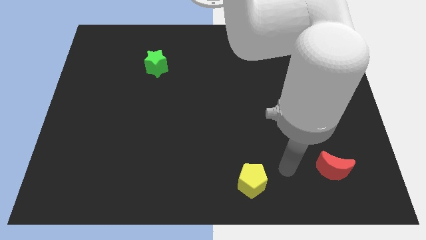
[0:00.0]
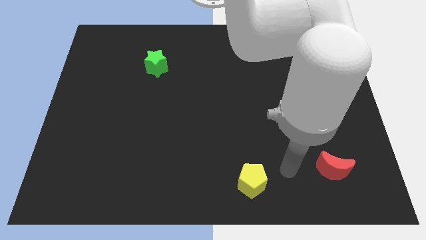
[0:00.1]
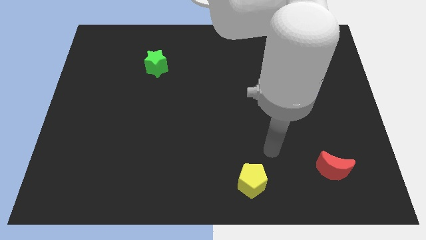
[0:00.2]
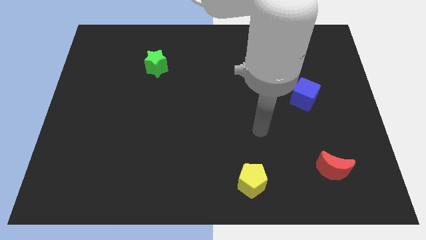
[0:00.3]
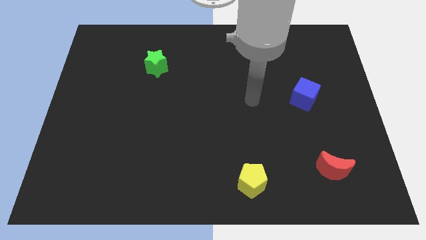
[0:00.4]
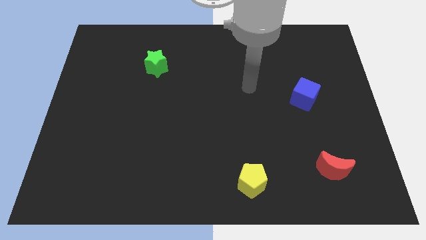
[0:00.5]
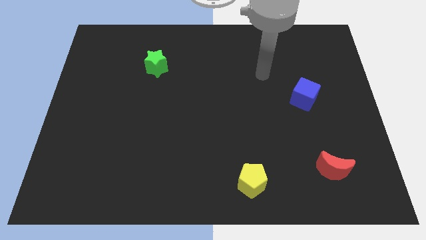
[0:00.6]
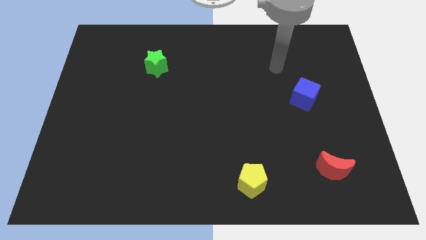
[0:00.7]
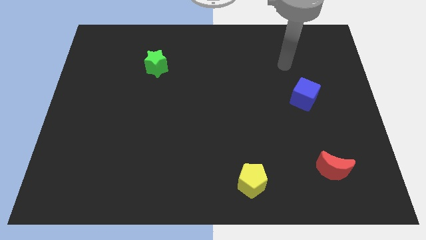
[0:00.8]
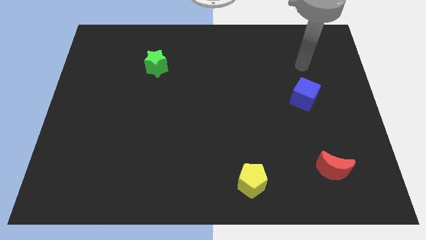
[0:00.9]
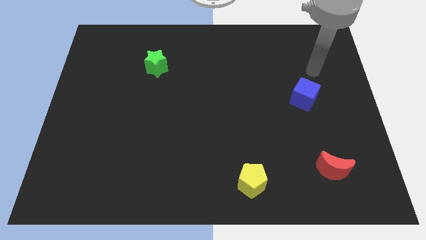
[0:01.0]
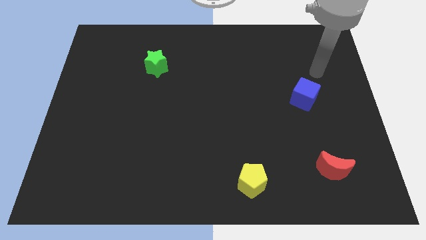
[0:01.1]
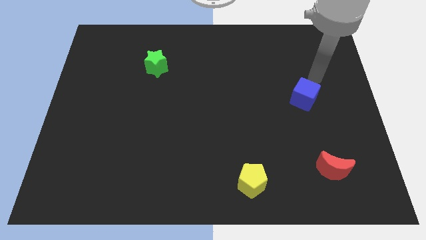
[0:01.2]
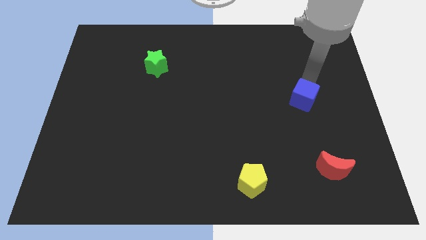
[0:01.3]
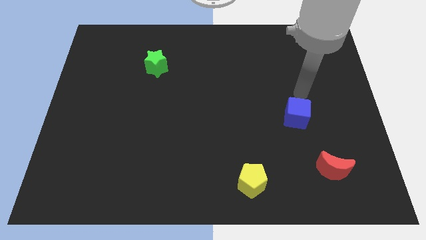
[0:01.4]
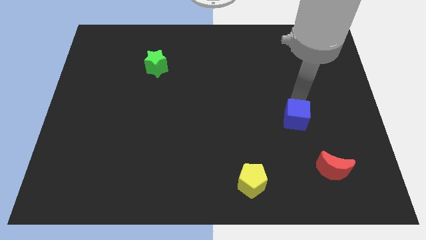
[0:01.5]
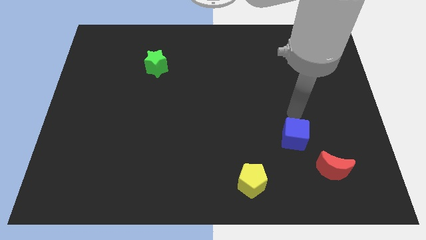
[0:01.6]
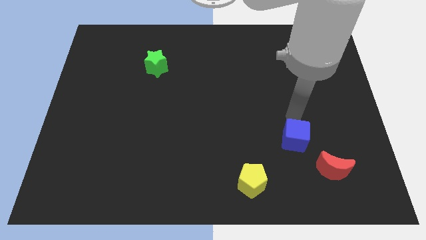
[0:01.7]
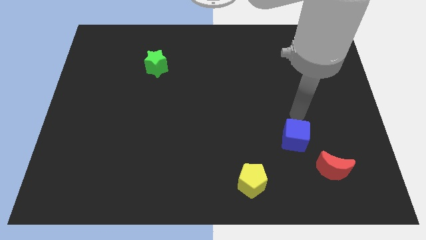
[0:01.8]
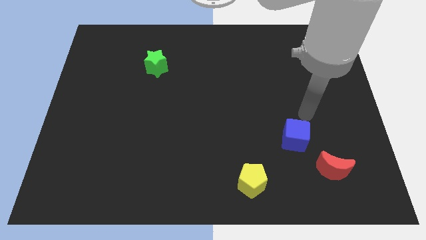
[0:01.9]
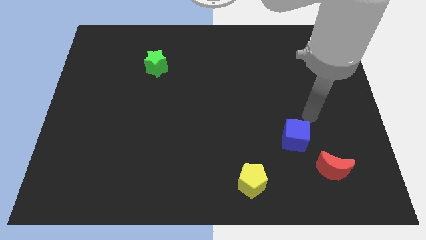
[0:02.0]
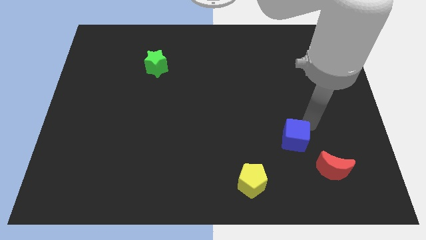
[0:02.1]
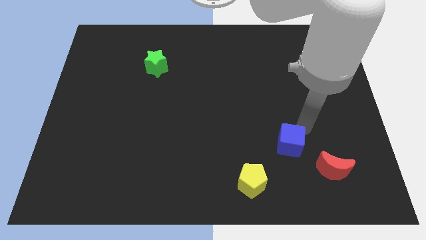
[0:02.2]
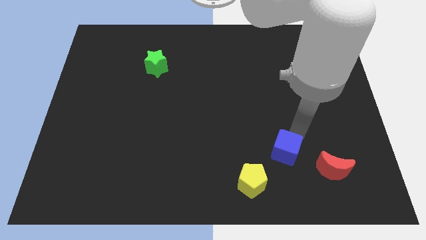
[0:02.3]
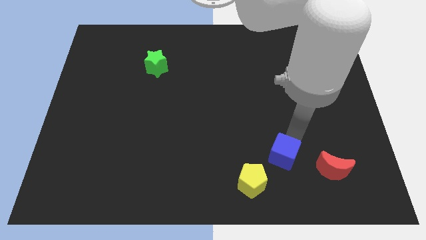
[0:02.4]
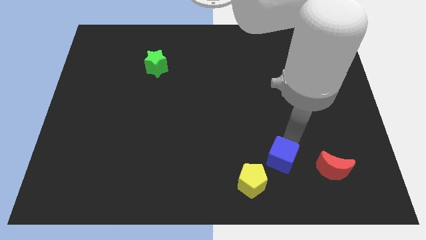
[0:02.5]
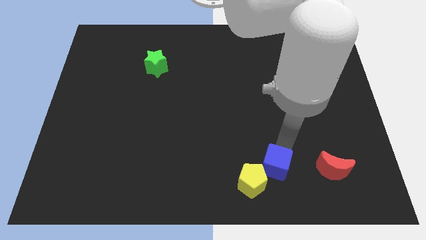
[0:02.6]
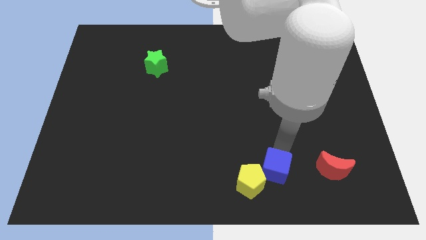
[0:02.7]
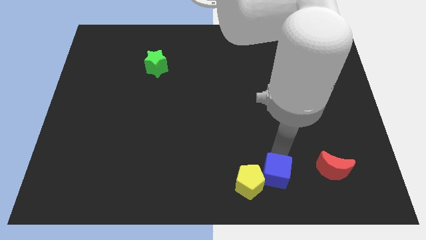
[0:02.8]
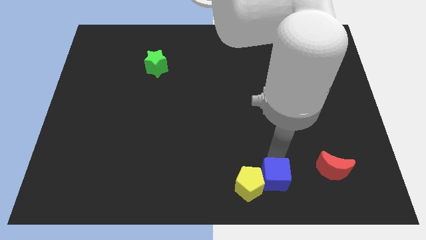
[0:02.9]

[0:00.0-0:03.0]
move the cube next to the pentagon

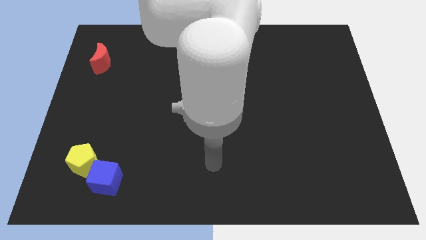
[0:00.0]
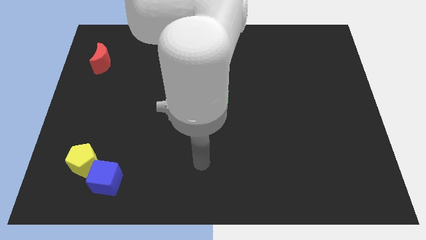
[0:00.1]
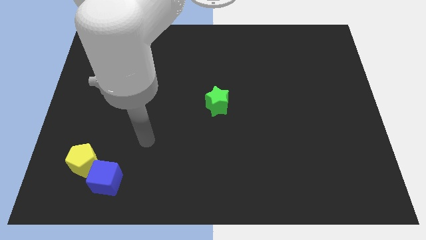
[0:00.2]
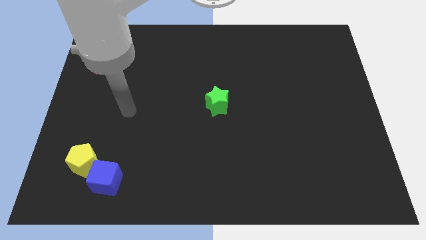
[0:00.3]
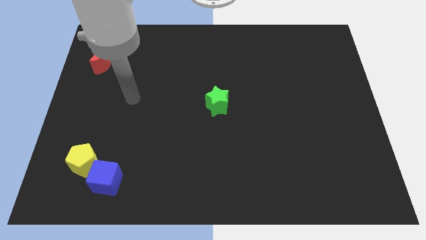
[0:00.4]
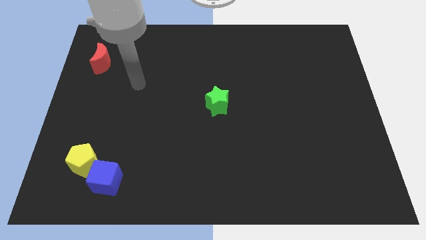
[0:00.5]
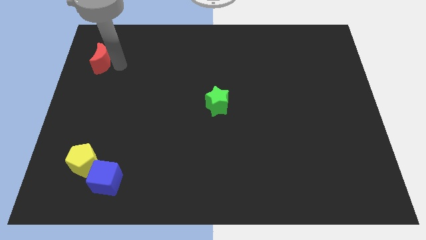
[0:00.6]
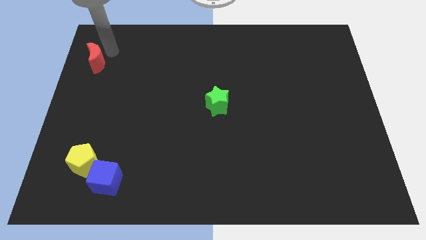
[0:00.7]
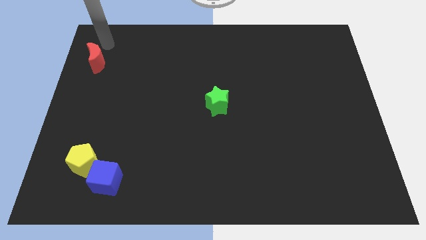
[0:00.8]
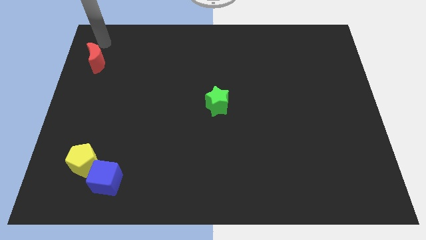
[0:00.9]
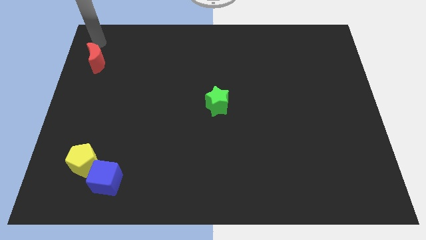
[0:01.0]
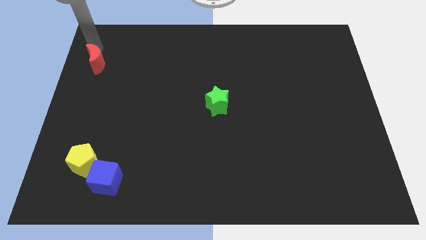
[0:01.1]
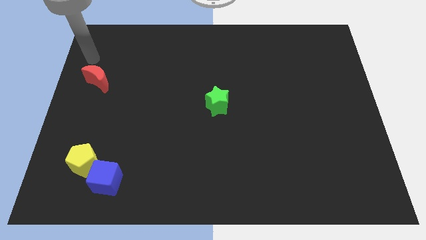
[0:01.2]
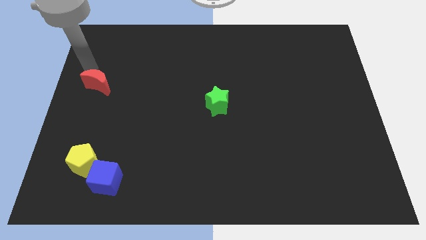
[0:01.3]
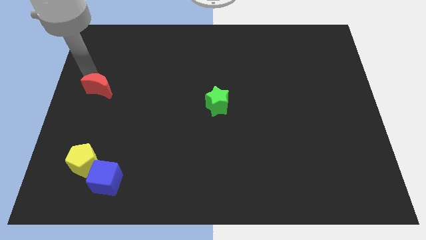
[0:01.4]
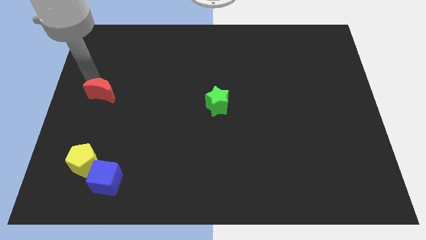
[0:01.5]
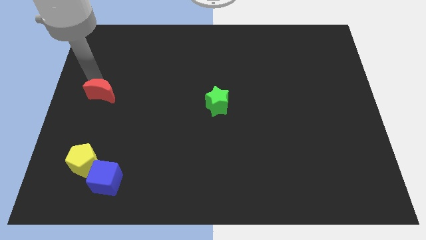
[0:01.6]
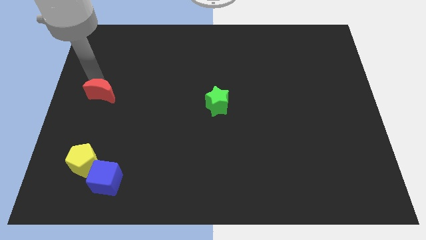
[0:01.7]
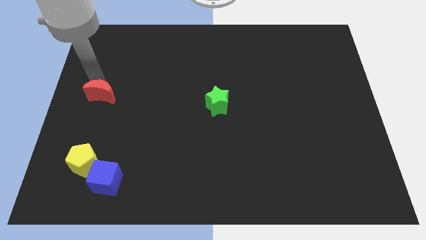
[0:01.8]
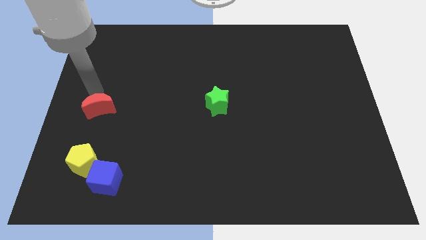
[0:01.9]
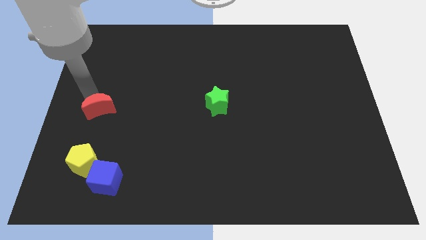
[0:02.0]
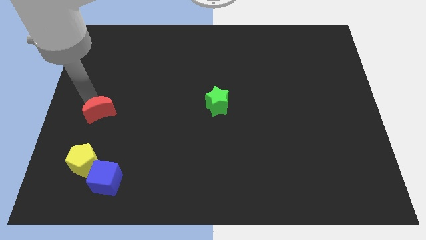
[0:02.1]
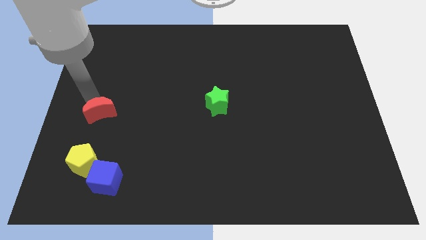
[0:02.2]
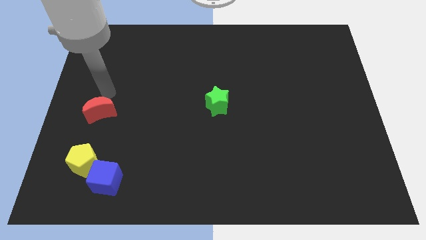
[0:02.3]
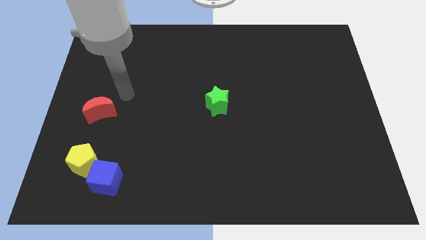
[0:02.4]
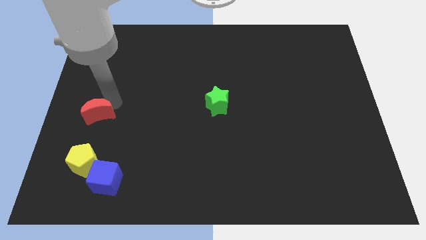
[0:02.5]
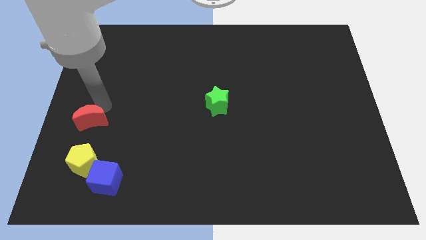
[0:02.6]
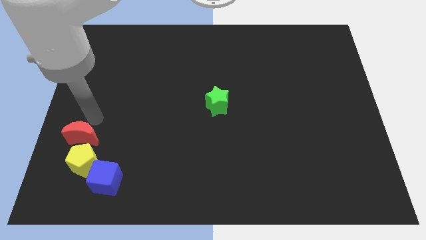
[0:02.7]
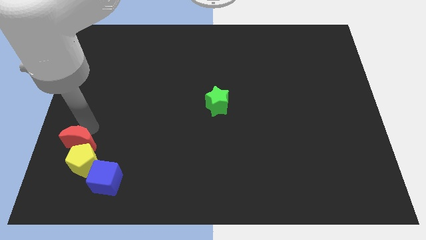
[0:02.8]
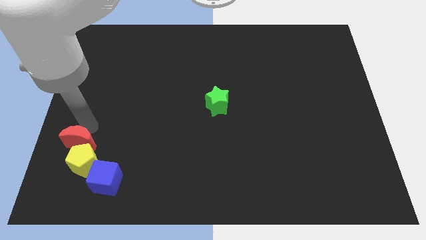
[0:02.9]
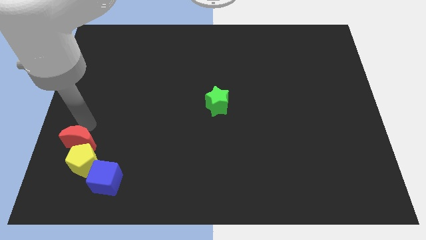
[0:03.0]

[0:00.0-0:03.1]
push the red moon close to the yellow block

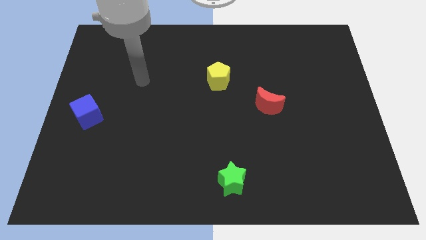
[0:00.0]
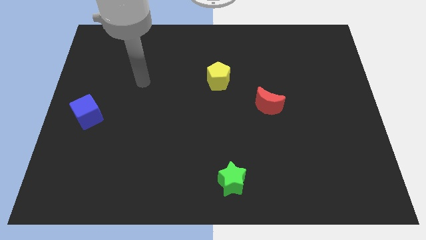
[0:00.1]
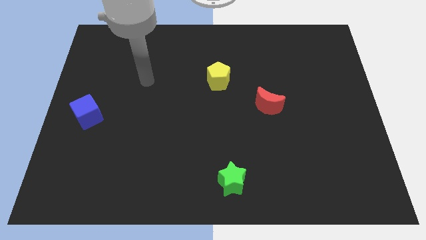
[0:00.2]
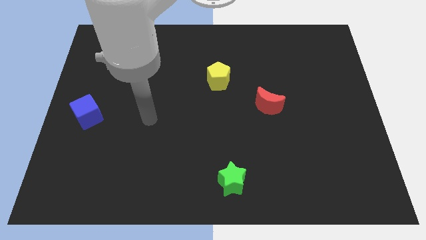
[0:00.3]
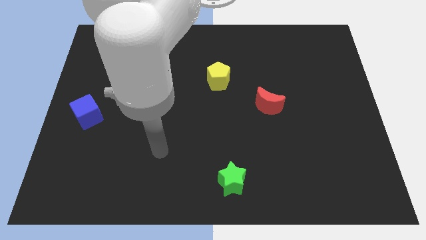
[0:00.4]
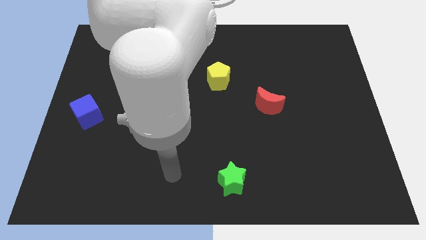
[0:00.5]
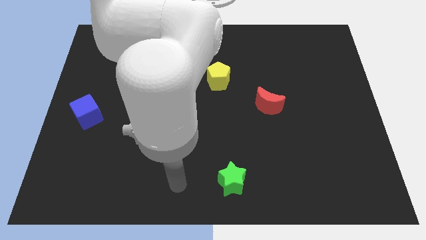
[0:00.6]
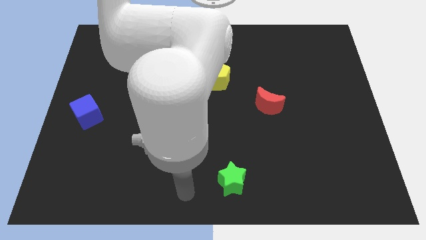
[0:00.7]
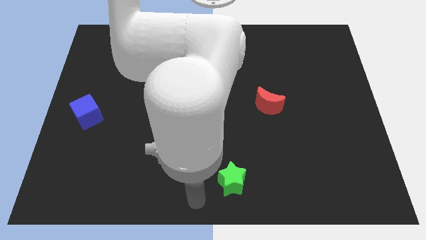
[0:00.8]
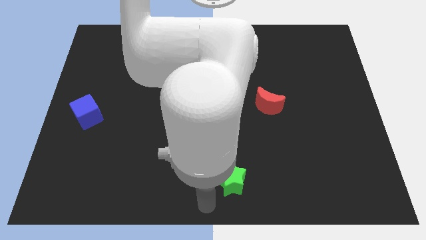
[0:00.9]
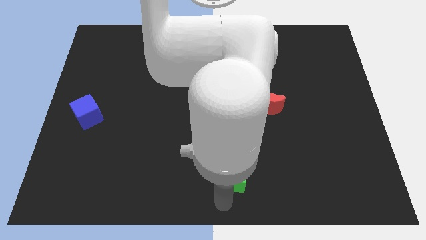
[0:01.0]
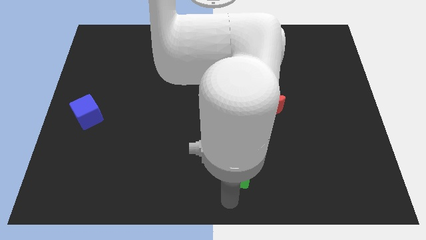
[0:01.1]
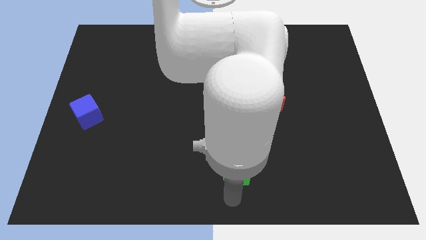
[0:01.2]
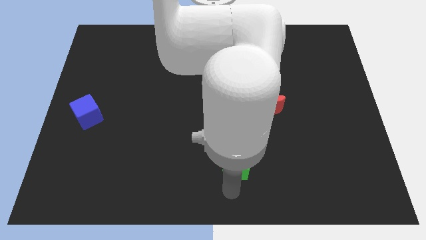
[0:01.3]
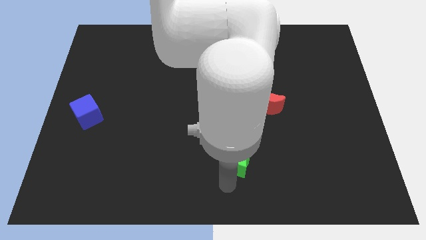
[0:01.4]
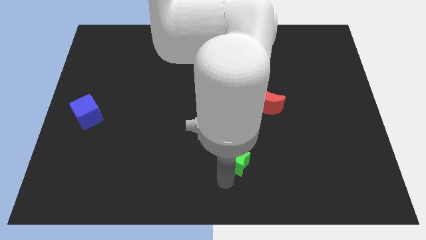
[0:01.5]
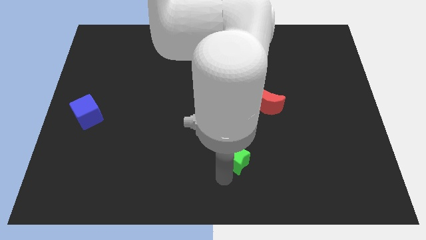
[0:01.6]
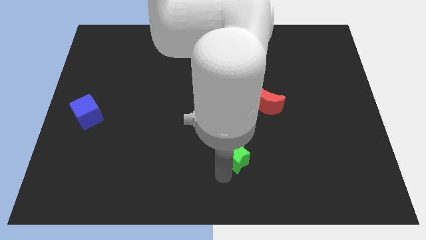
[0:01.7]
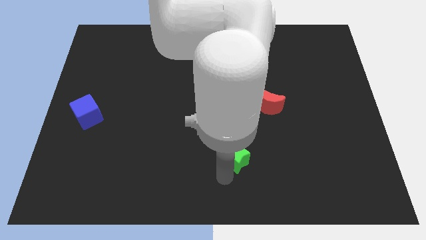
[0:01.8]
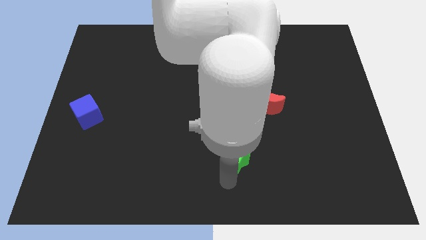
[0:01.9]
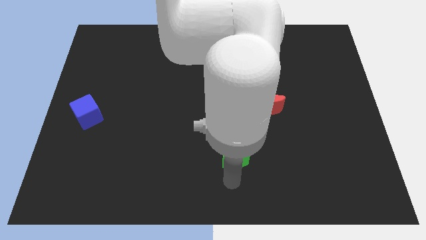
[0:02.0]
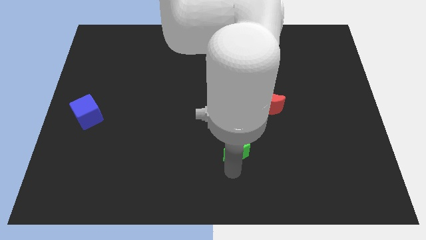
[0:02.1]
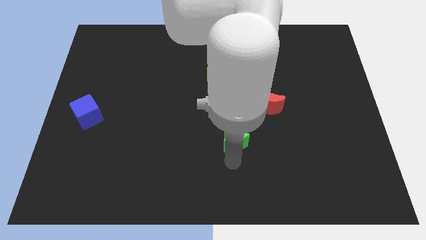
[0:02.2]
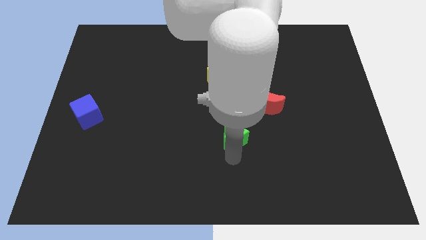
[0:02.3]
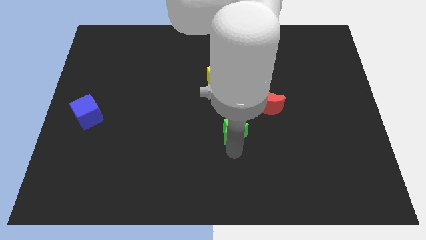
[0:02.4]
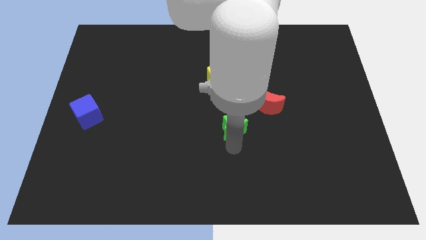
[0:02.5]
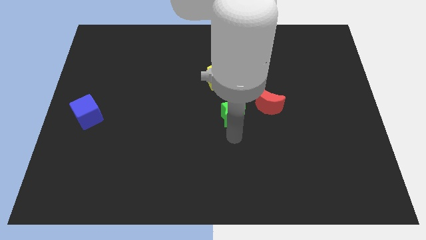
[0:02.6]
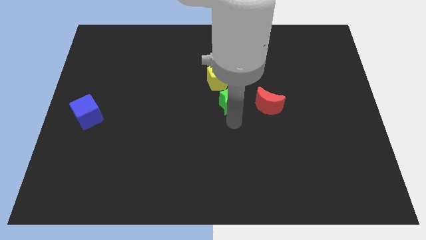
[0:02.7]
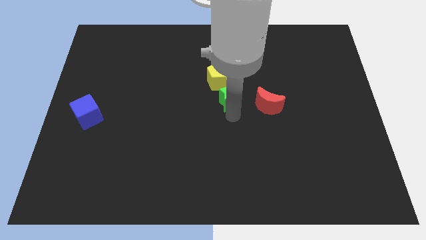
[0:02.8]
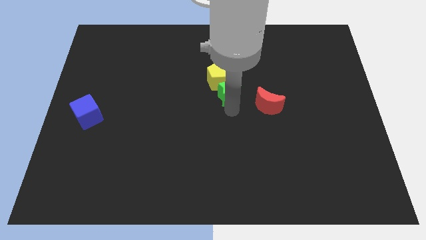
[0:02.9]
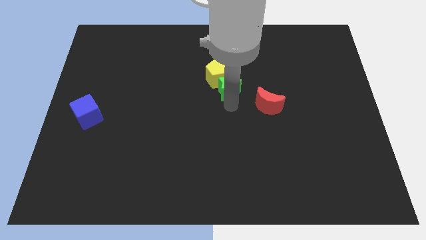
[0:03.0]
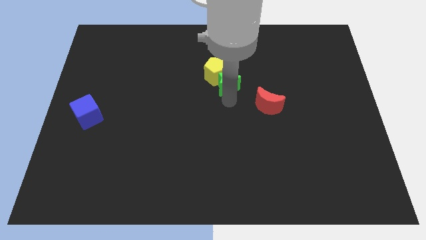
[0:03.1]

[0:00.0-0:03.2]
move the green block towards the yellow pentagon
